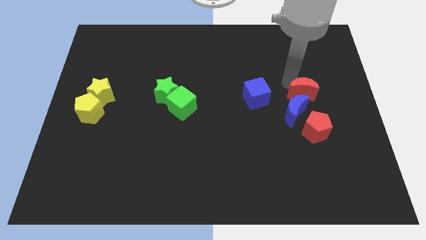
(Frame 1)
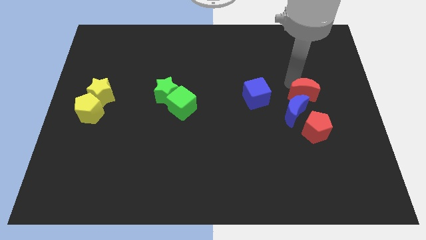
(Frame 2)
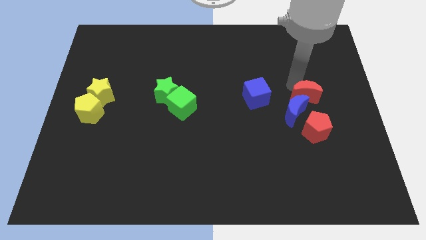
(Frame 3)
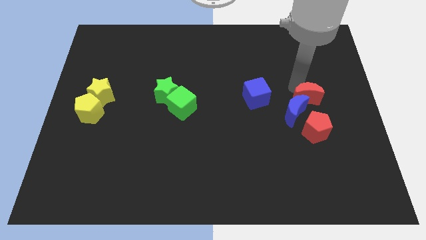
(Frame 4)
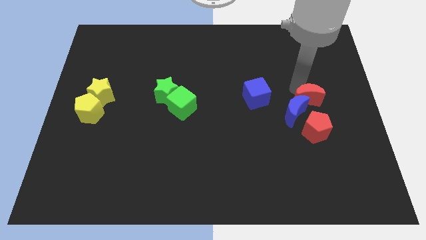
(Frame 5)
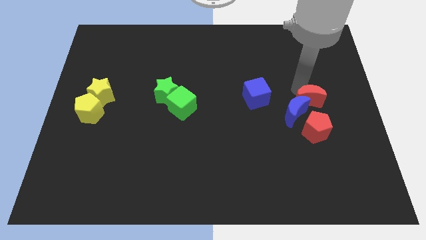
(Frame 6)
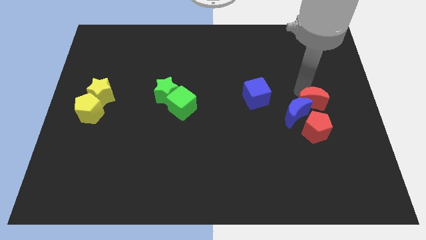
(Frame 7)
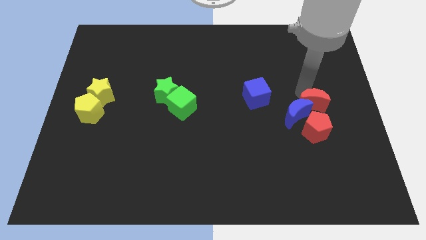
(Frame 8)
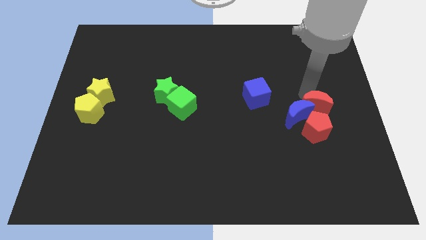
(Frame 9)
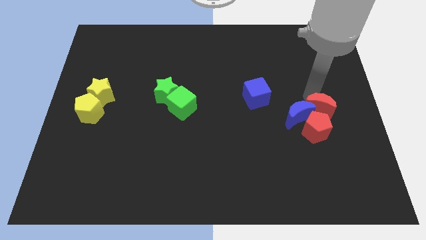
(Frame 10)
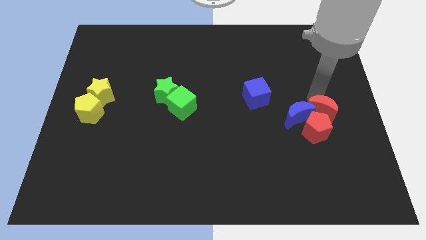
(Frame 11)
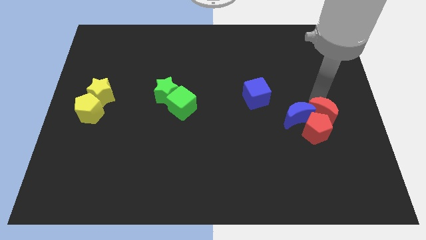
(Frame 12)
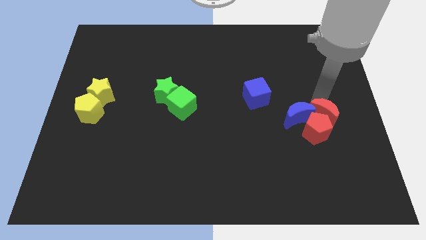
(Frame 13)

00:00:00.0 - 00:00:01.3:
push red crescent into blue crescent

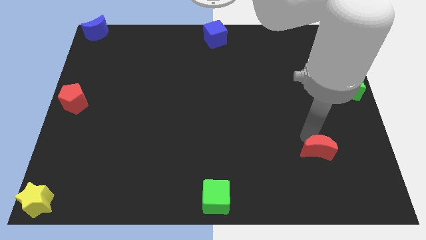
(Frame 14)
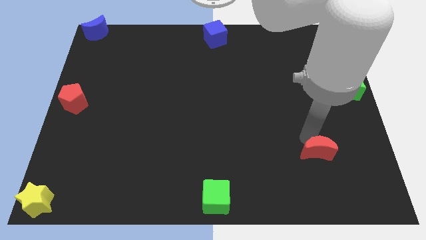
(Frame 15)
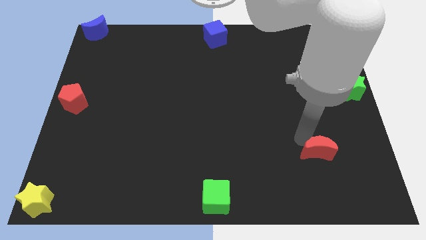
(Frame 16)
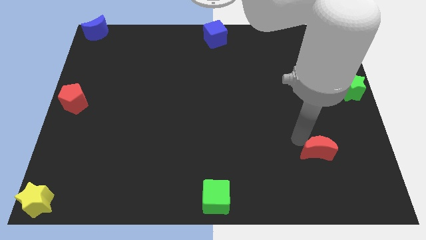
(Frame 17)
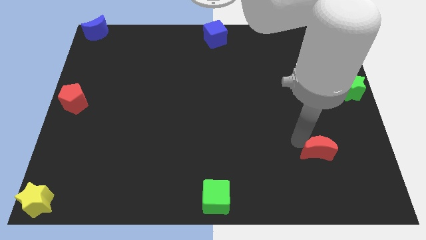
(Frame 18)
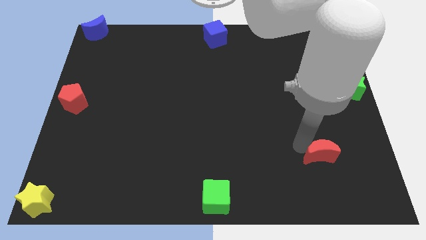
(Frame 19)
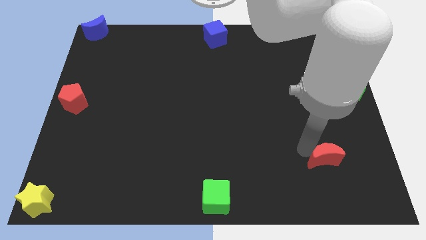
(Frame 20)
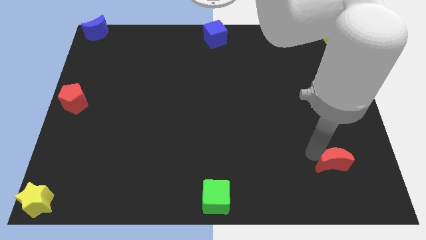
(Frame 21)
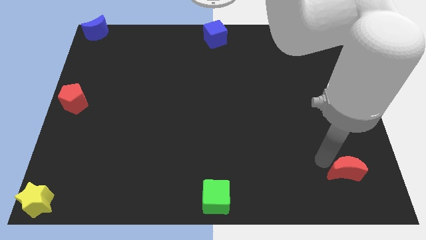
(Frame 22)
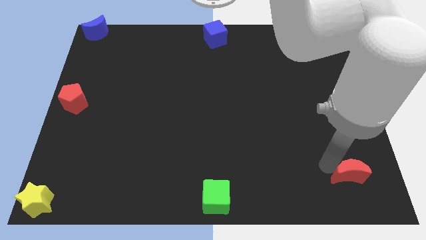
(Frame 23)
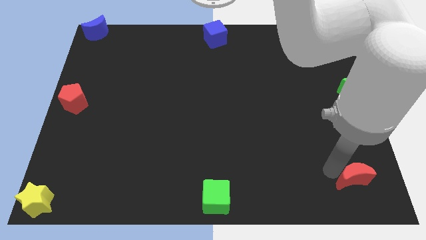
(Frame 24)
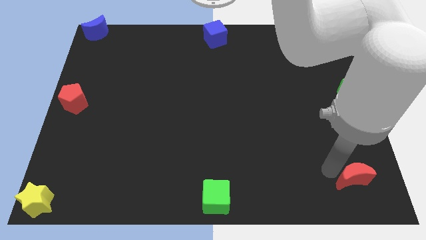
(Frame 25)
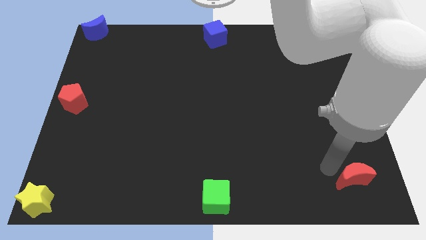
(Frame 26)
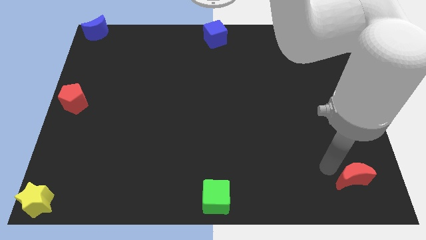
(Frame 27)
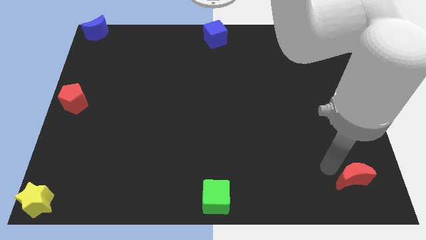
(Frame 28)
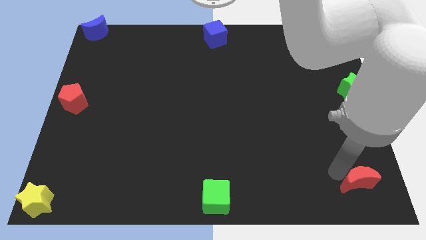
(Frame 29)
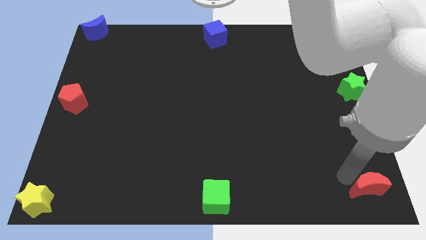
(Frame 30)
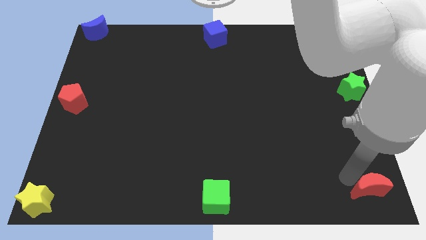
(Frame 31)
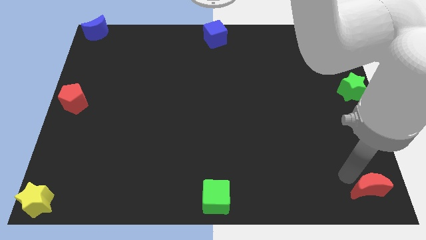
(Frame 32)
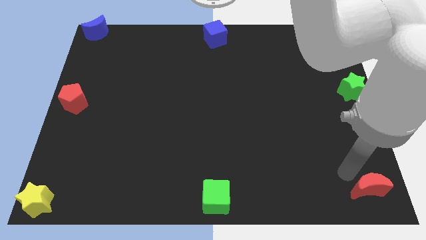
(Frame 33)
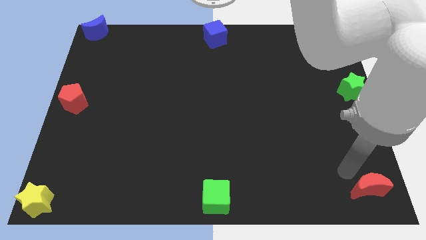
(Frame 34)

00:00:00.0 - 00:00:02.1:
push the red moon at the bottom right corner of the board

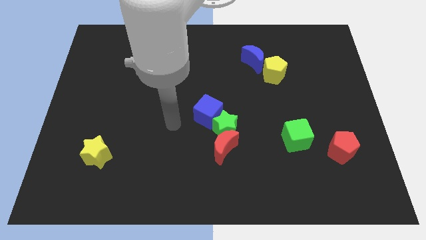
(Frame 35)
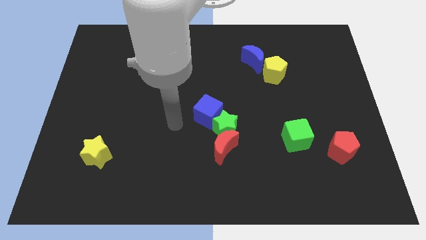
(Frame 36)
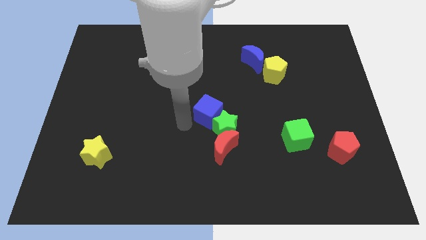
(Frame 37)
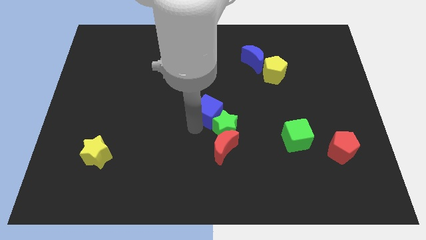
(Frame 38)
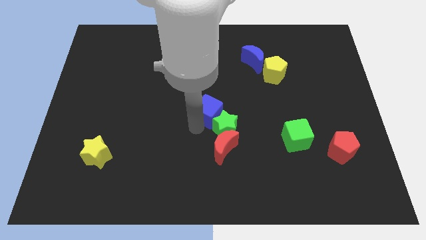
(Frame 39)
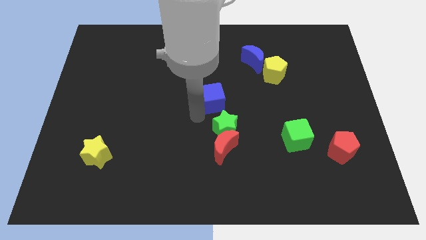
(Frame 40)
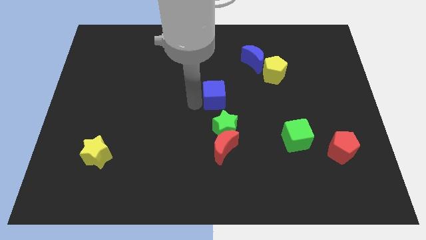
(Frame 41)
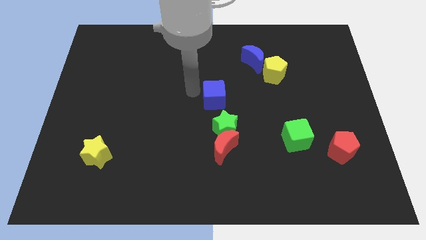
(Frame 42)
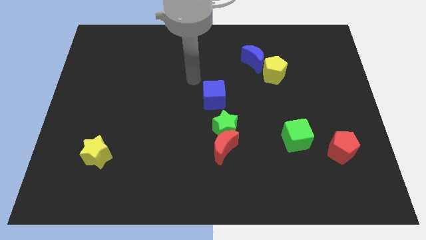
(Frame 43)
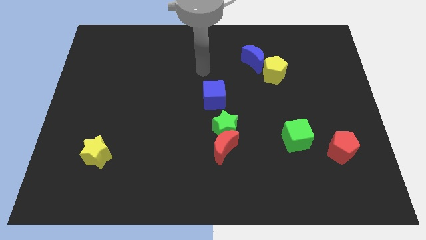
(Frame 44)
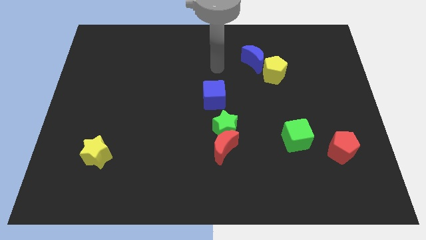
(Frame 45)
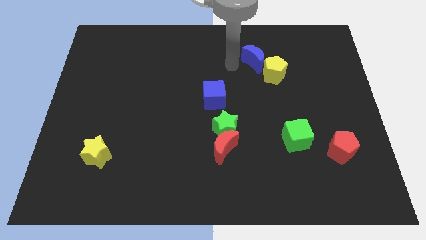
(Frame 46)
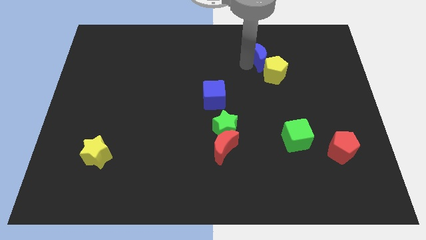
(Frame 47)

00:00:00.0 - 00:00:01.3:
separate blue cube from the green star

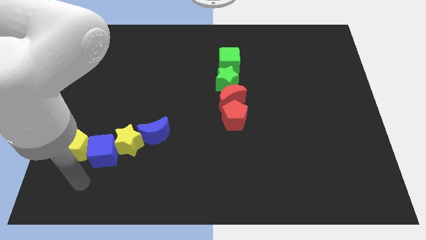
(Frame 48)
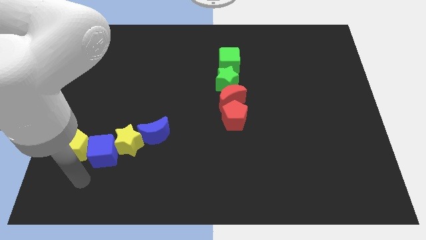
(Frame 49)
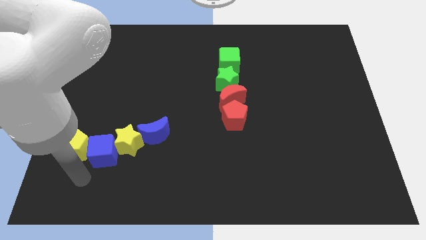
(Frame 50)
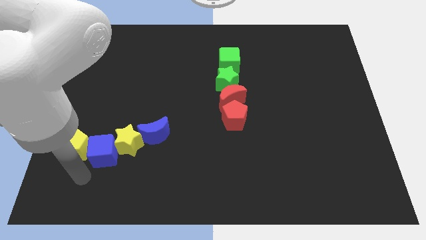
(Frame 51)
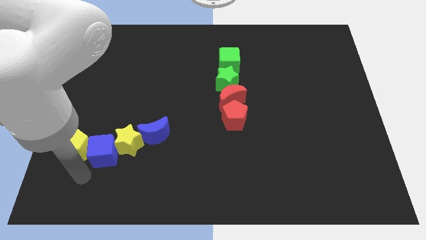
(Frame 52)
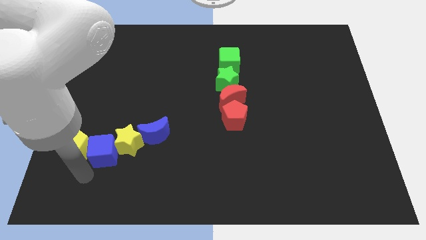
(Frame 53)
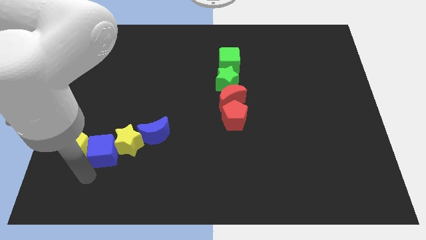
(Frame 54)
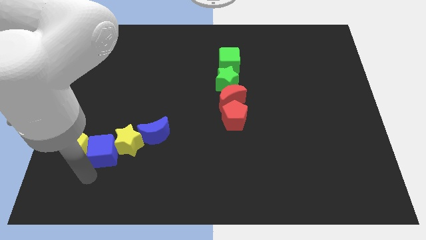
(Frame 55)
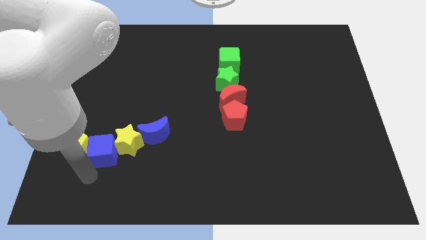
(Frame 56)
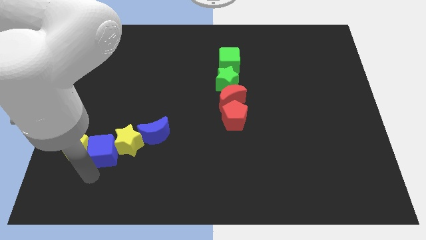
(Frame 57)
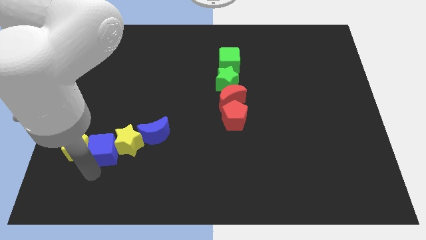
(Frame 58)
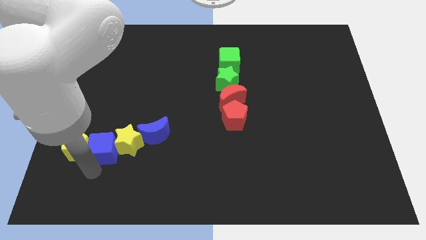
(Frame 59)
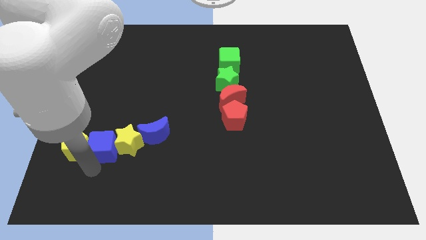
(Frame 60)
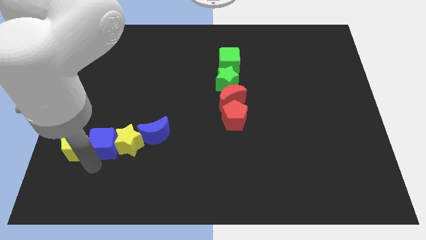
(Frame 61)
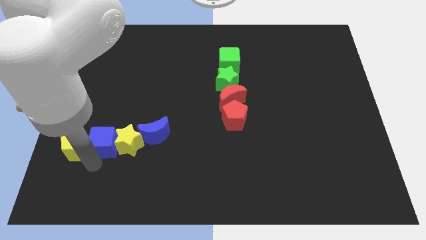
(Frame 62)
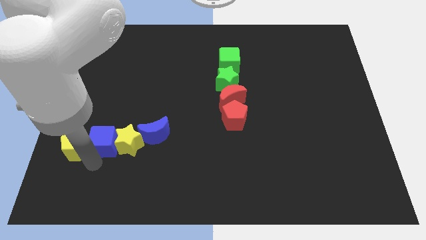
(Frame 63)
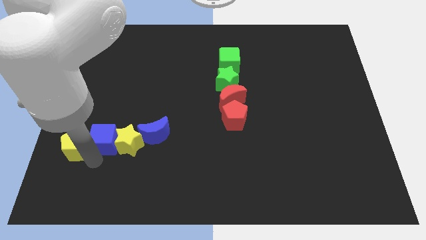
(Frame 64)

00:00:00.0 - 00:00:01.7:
place the blue cube to the left side of the yellow star

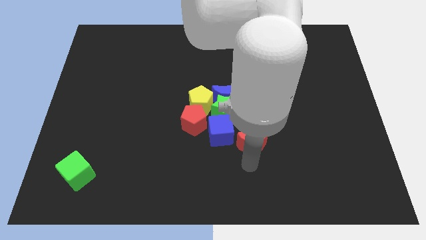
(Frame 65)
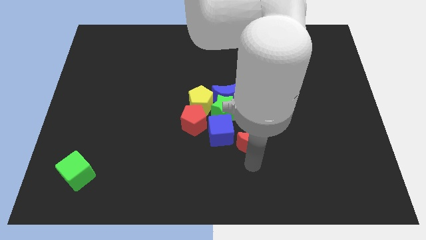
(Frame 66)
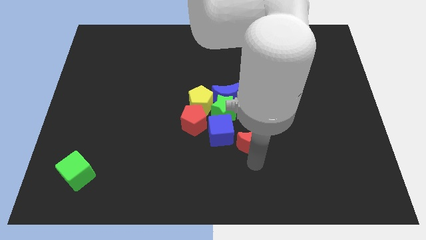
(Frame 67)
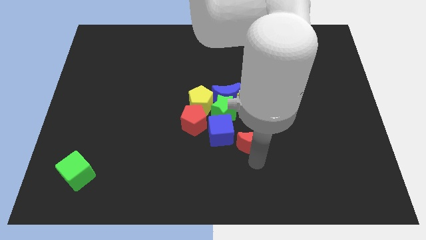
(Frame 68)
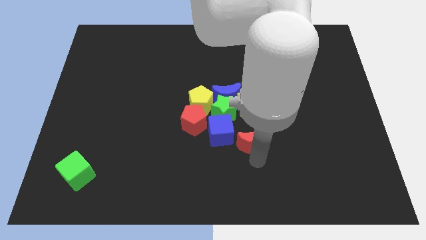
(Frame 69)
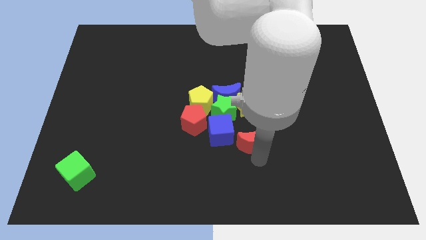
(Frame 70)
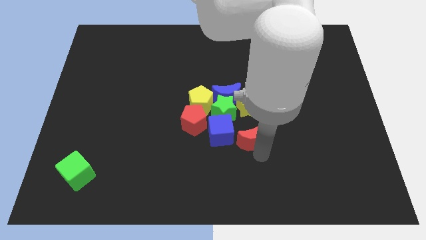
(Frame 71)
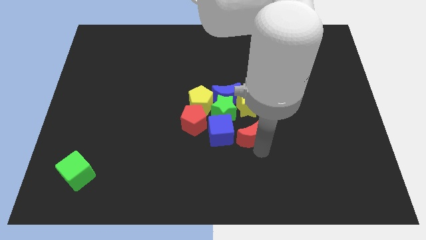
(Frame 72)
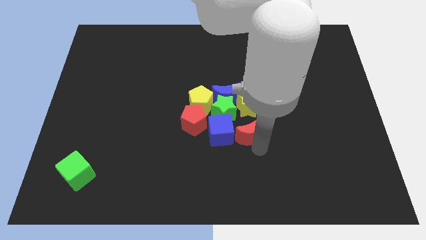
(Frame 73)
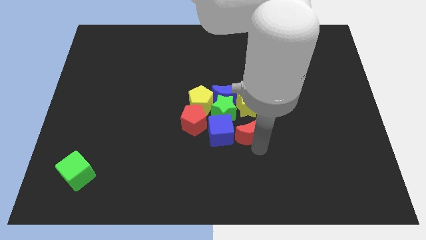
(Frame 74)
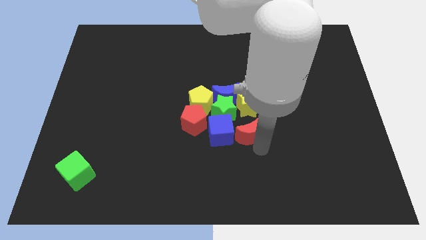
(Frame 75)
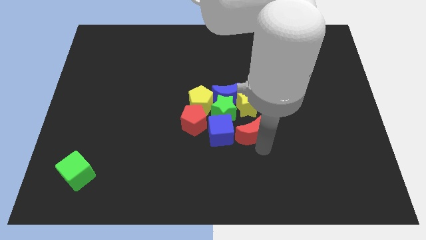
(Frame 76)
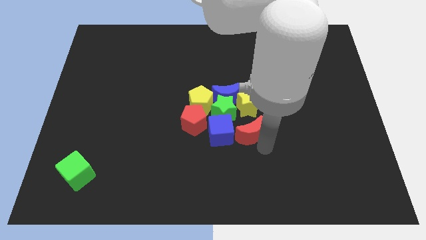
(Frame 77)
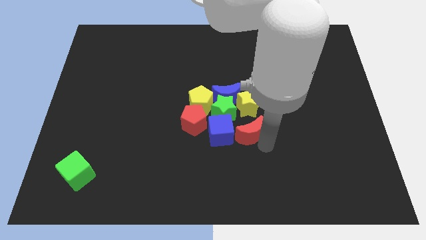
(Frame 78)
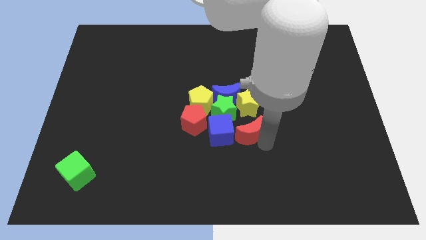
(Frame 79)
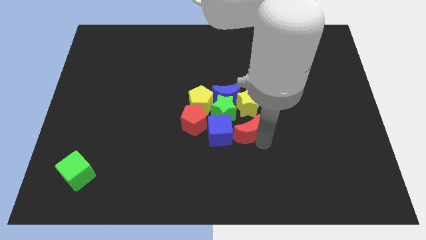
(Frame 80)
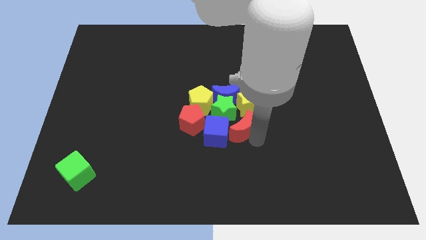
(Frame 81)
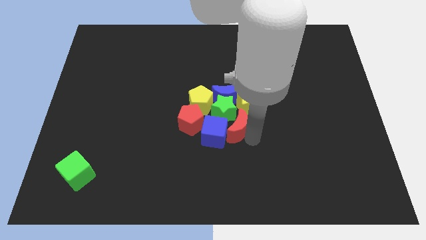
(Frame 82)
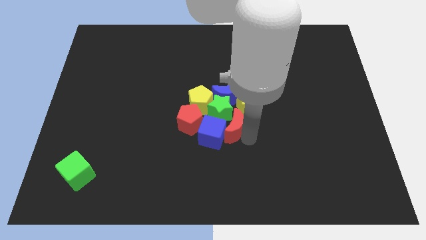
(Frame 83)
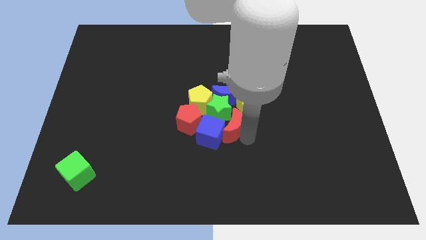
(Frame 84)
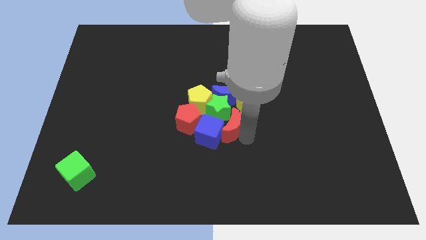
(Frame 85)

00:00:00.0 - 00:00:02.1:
drag the red moon into the green star and the blue cube

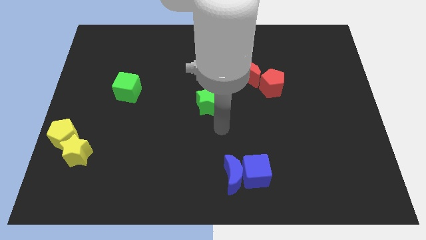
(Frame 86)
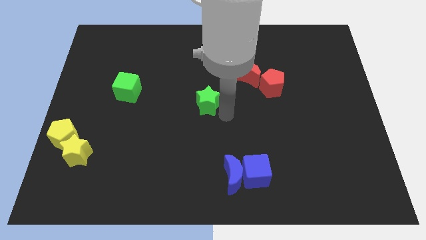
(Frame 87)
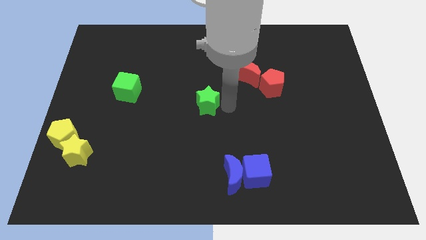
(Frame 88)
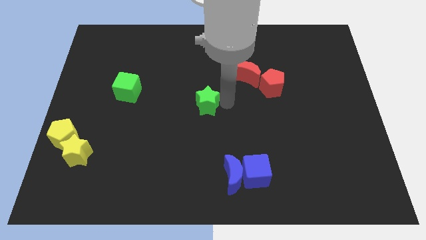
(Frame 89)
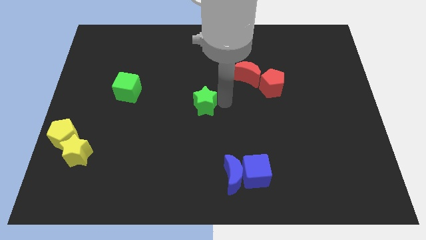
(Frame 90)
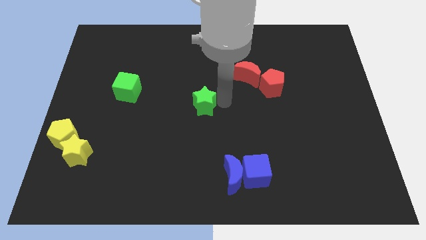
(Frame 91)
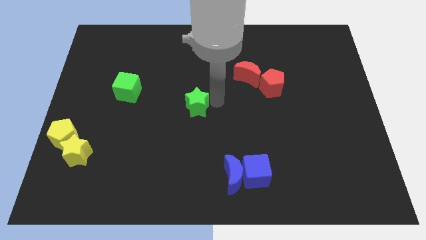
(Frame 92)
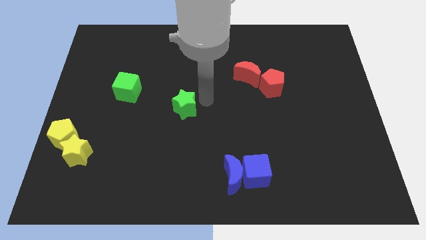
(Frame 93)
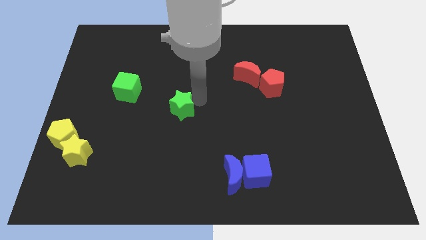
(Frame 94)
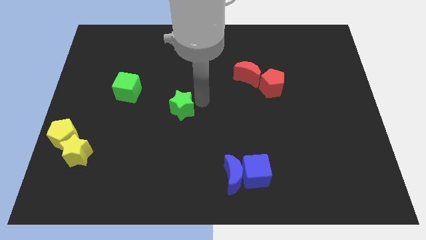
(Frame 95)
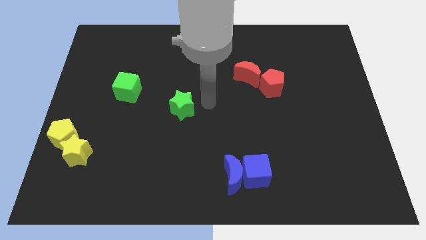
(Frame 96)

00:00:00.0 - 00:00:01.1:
move the green star slightly towards the left
